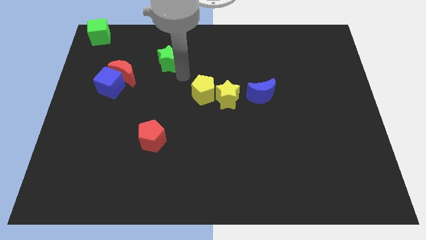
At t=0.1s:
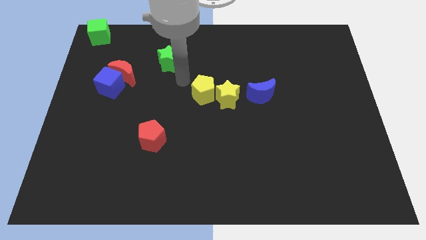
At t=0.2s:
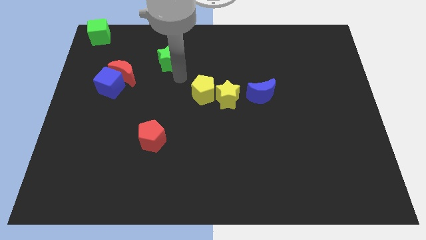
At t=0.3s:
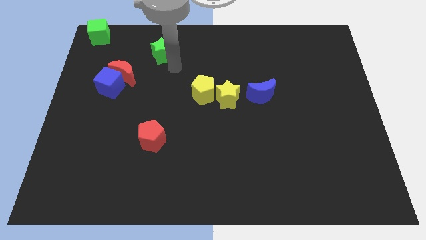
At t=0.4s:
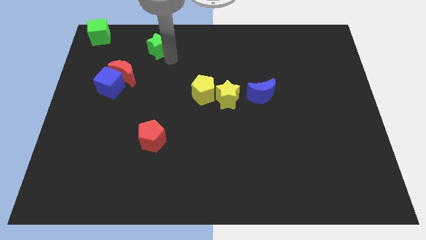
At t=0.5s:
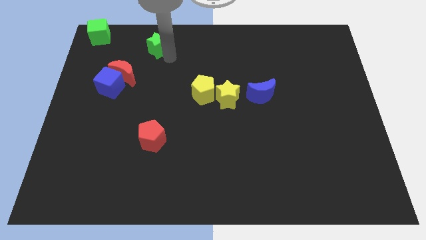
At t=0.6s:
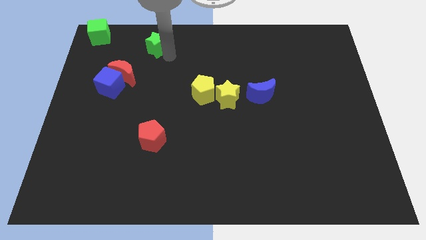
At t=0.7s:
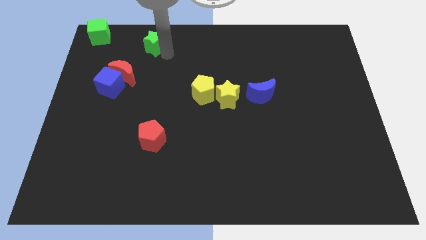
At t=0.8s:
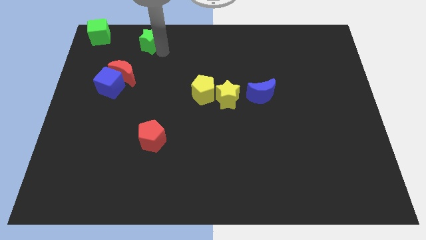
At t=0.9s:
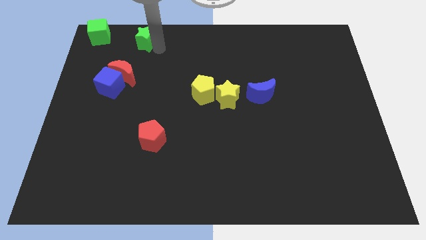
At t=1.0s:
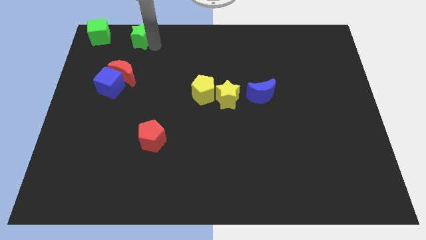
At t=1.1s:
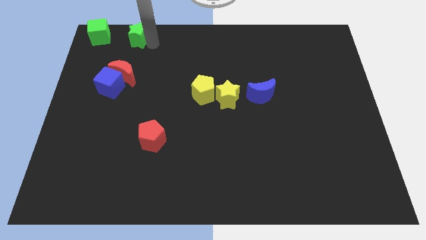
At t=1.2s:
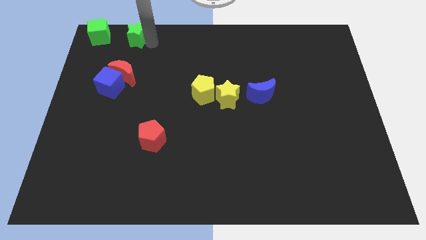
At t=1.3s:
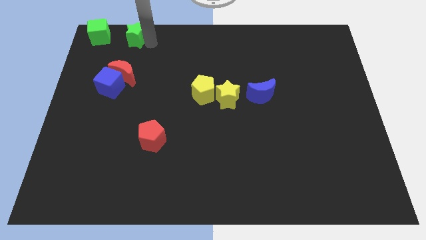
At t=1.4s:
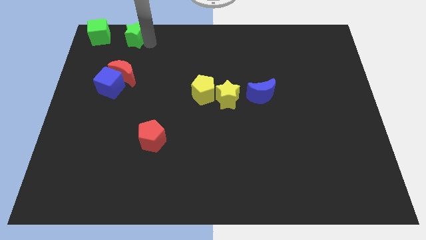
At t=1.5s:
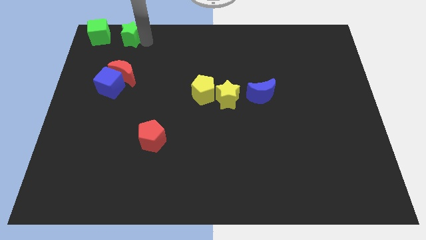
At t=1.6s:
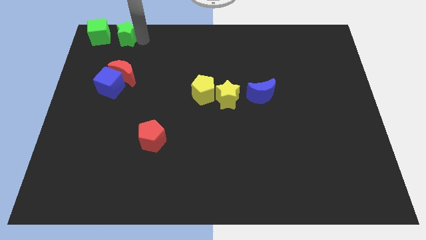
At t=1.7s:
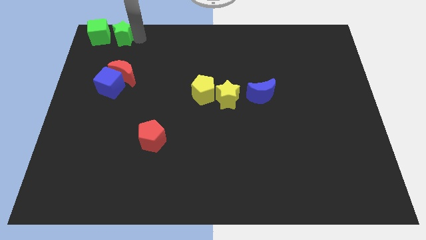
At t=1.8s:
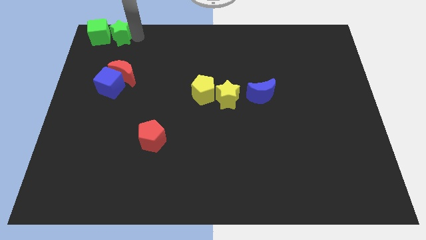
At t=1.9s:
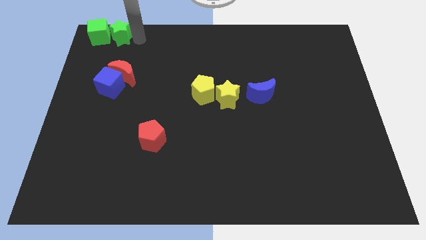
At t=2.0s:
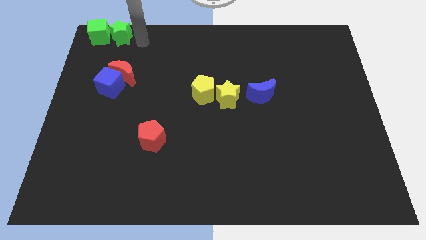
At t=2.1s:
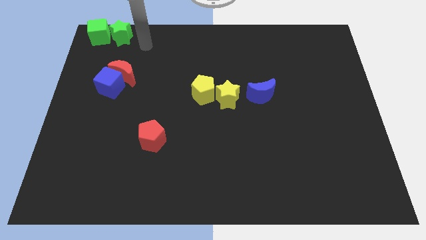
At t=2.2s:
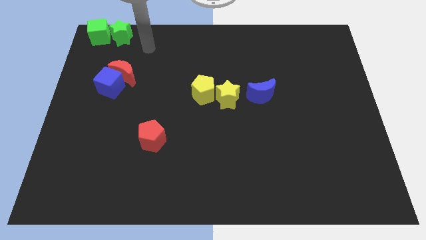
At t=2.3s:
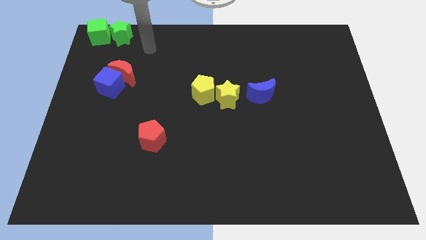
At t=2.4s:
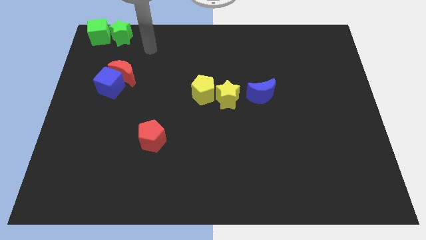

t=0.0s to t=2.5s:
move the green star close to the green cube

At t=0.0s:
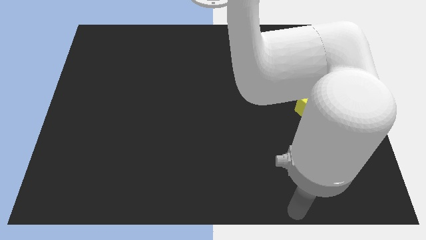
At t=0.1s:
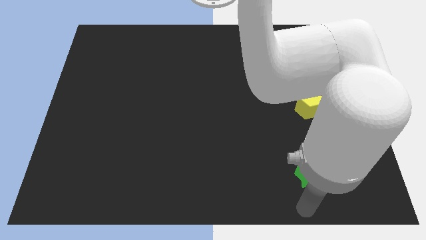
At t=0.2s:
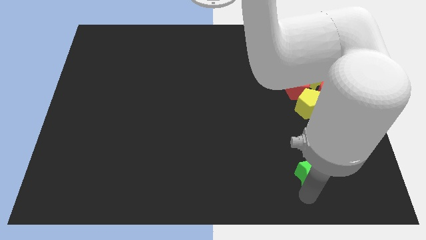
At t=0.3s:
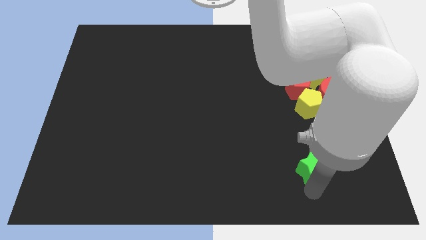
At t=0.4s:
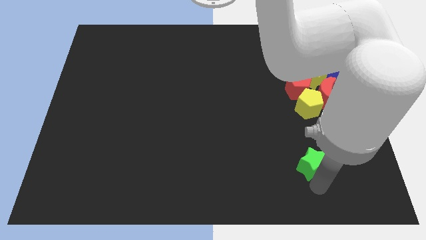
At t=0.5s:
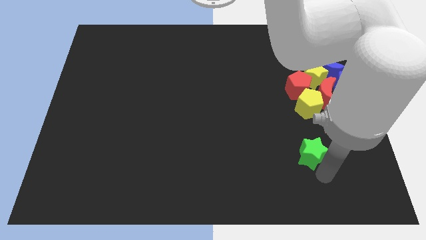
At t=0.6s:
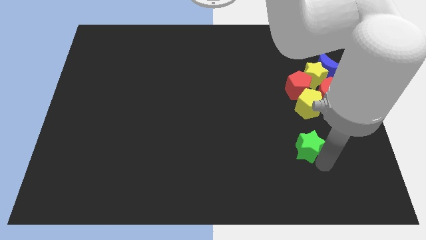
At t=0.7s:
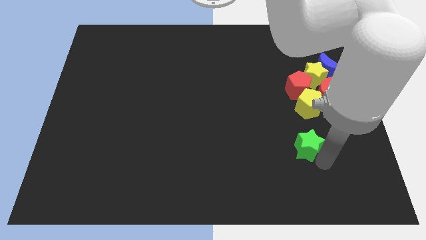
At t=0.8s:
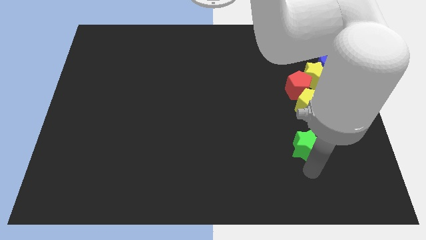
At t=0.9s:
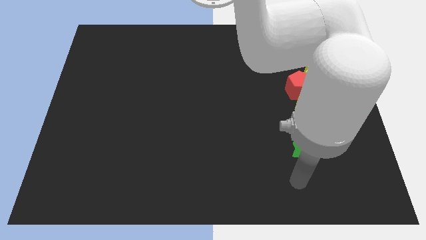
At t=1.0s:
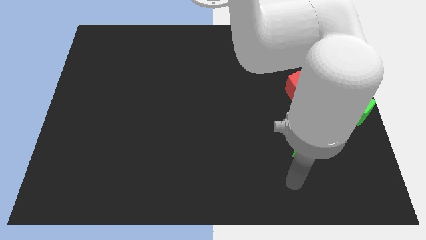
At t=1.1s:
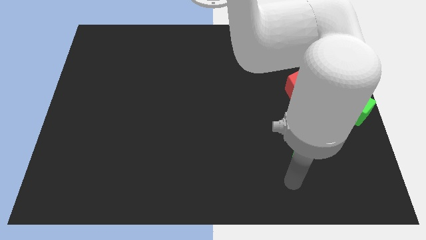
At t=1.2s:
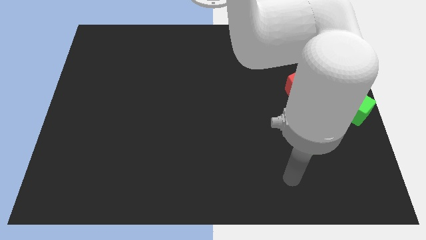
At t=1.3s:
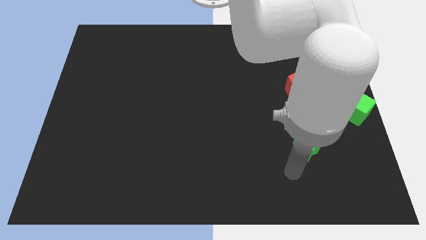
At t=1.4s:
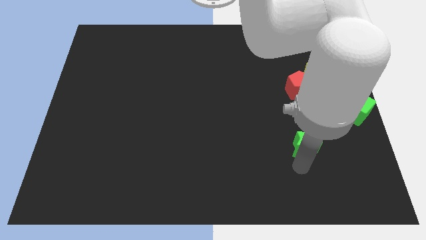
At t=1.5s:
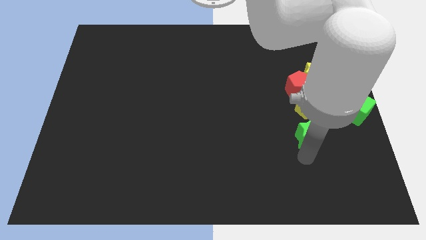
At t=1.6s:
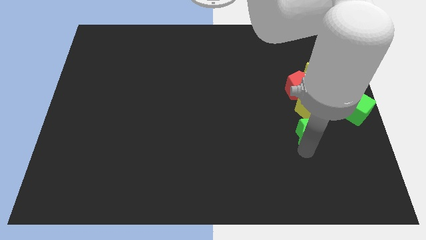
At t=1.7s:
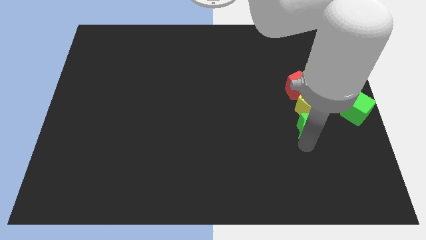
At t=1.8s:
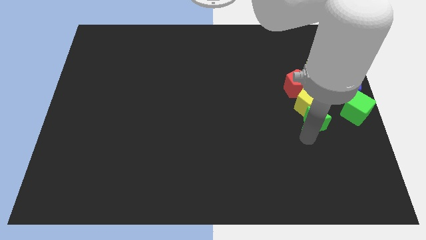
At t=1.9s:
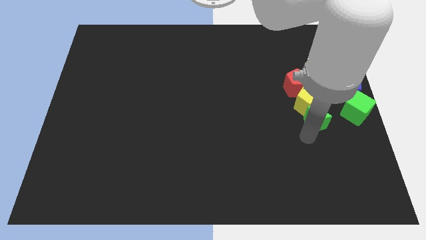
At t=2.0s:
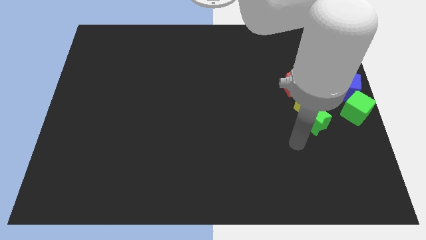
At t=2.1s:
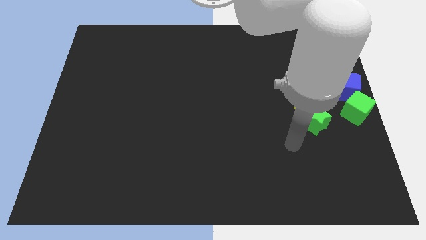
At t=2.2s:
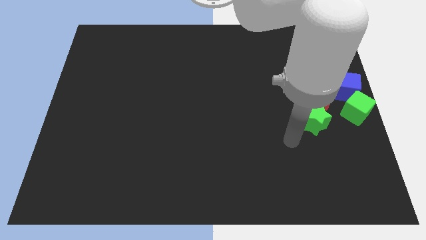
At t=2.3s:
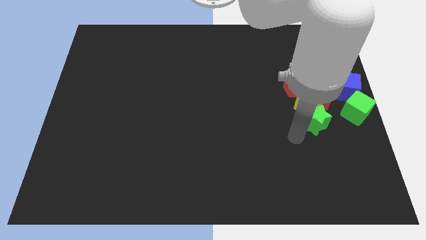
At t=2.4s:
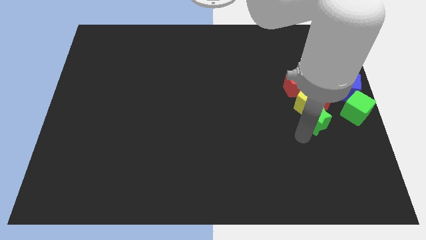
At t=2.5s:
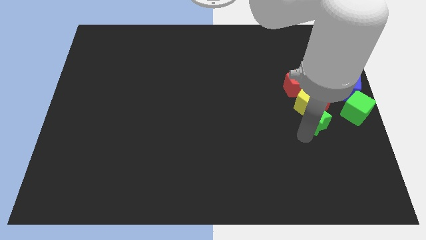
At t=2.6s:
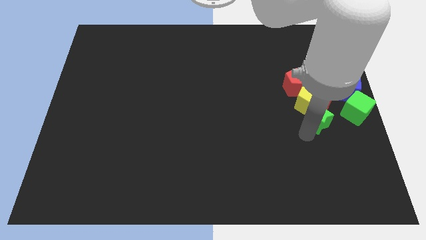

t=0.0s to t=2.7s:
push green star into the group of blocks

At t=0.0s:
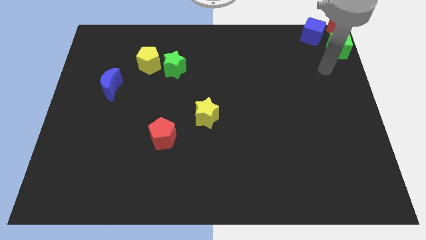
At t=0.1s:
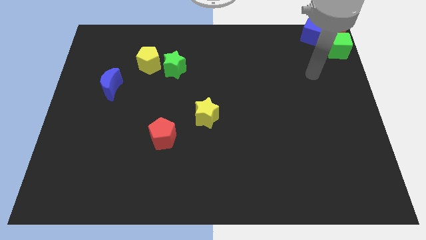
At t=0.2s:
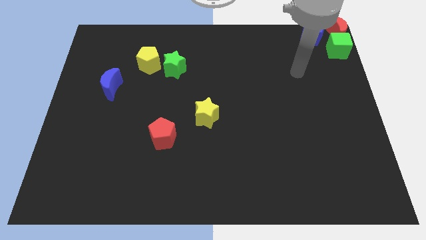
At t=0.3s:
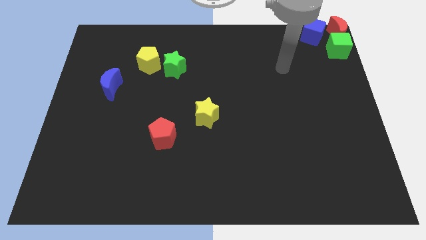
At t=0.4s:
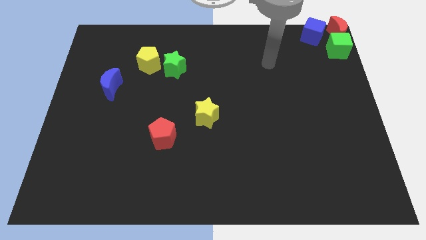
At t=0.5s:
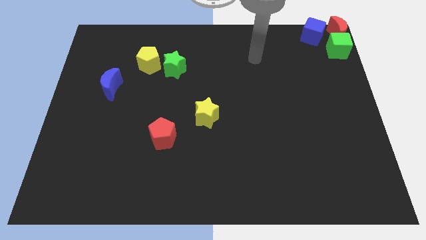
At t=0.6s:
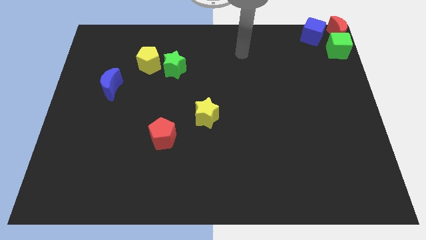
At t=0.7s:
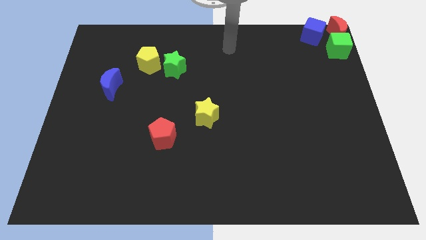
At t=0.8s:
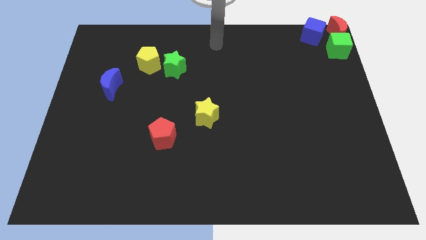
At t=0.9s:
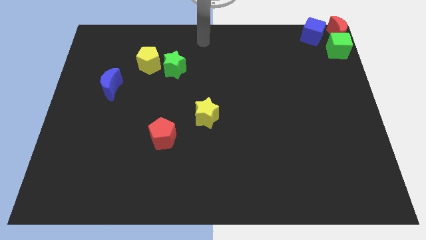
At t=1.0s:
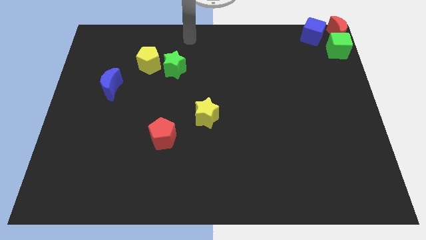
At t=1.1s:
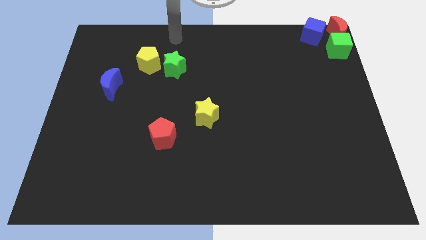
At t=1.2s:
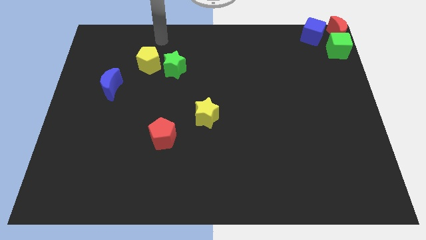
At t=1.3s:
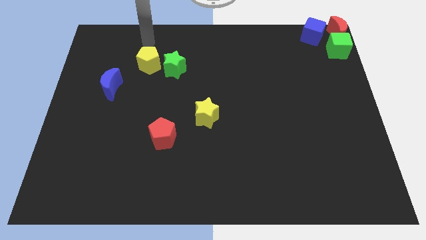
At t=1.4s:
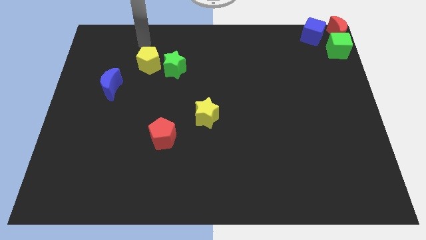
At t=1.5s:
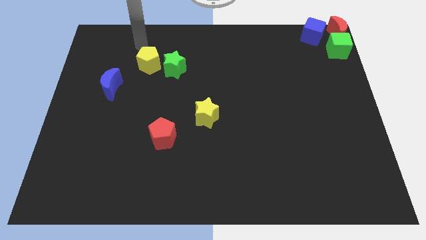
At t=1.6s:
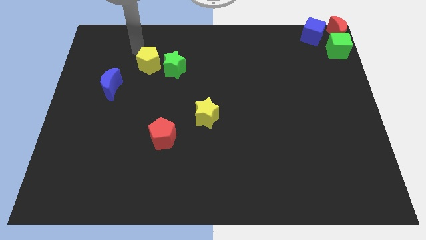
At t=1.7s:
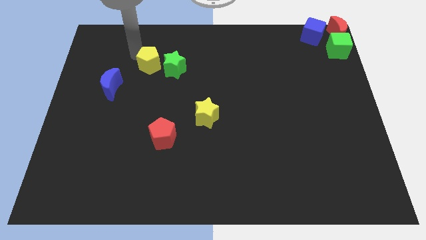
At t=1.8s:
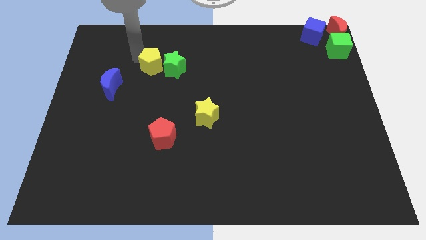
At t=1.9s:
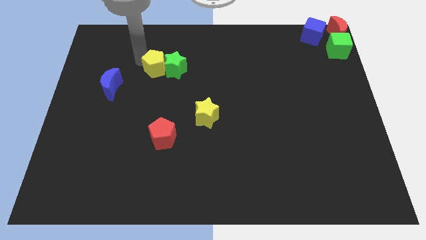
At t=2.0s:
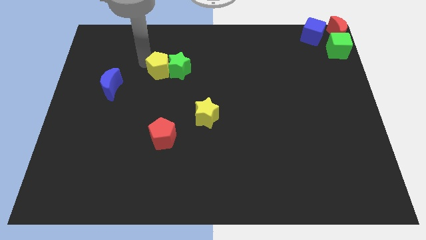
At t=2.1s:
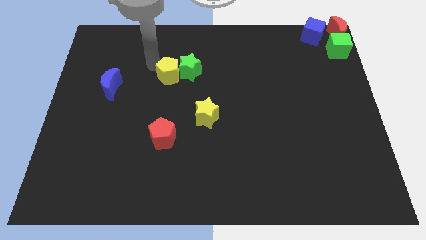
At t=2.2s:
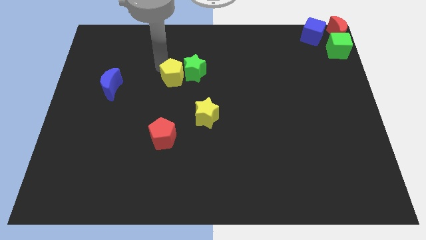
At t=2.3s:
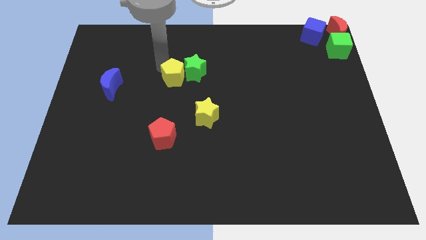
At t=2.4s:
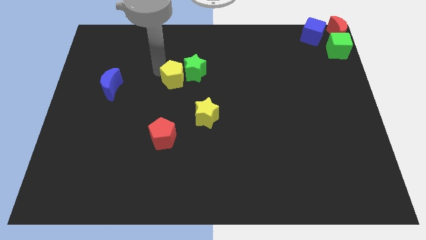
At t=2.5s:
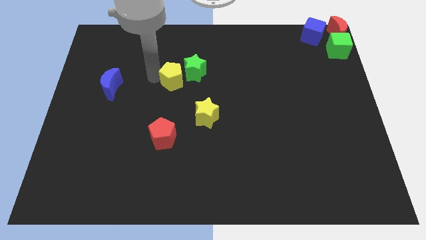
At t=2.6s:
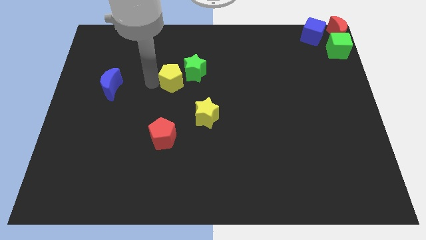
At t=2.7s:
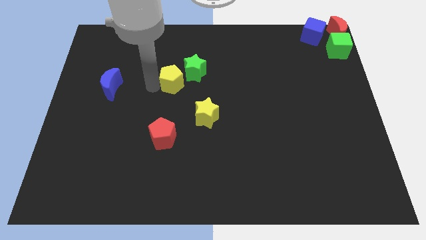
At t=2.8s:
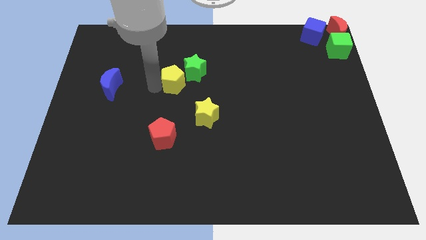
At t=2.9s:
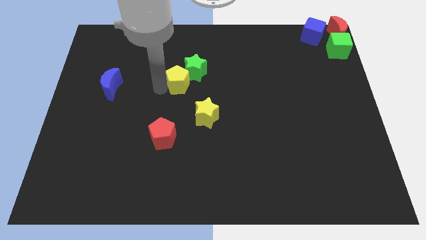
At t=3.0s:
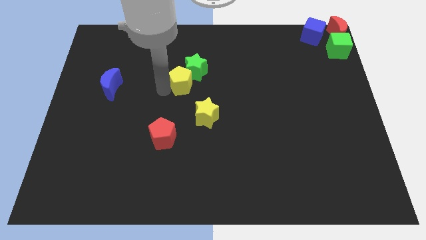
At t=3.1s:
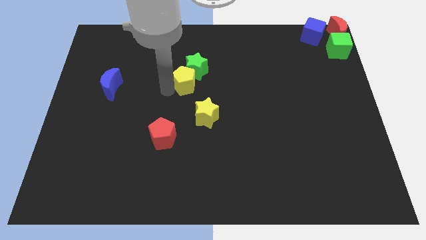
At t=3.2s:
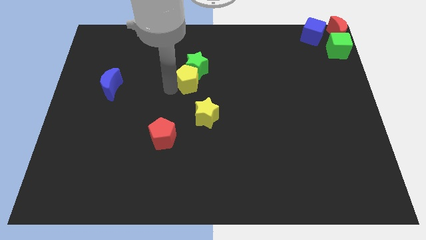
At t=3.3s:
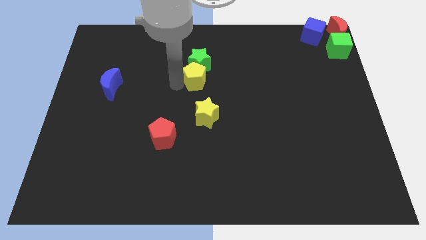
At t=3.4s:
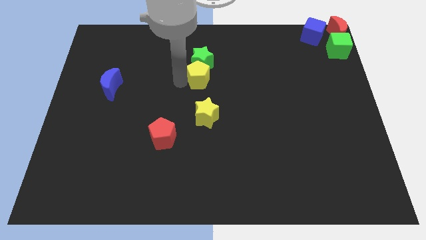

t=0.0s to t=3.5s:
push yellow pentagon in to green star

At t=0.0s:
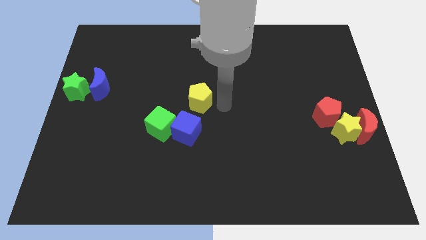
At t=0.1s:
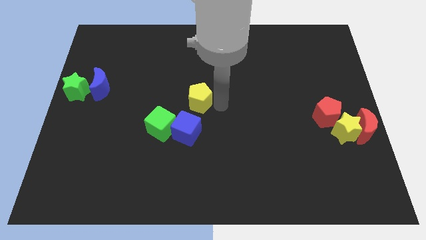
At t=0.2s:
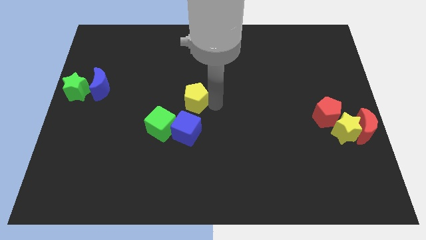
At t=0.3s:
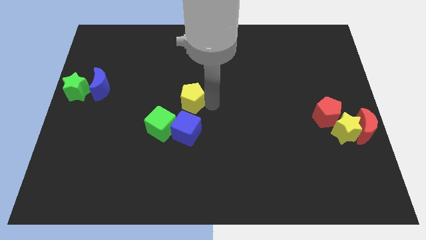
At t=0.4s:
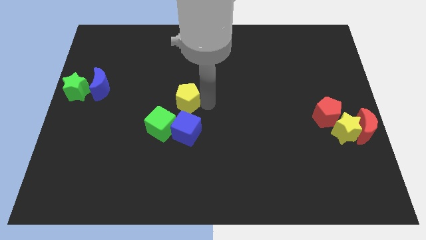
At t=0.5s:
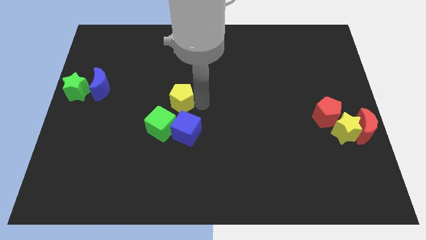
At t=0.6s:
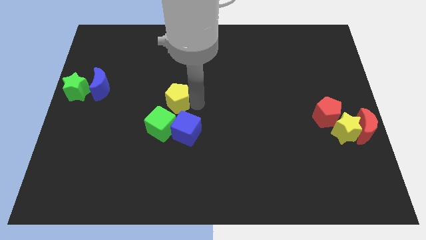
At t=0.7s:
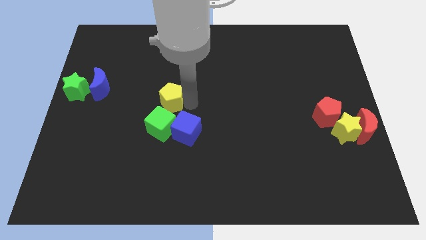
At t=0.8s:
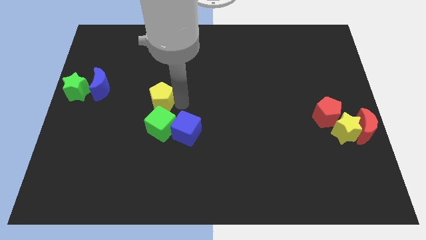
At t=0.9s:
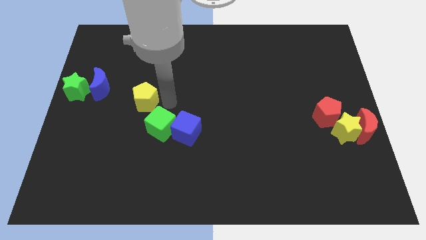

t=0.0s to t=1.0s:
place the yellow pentagon above the green cube
